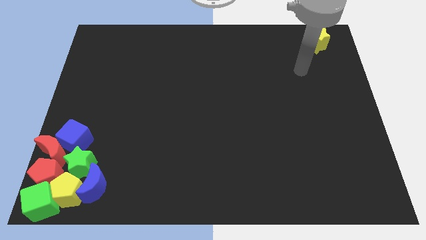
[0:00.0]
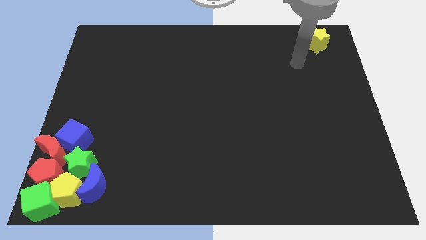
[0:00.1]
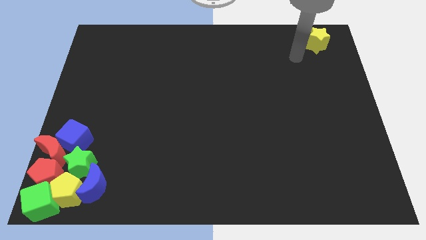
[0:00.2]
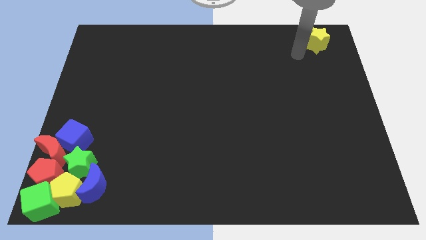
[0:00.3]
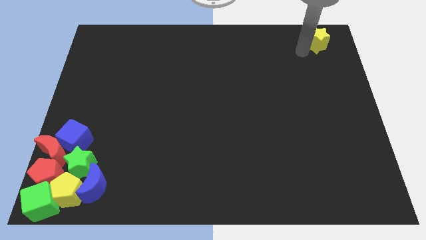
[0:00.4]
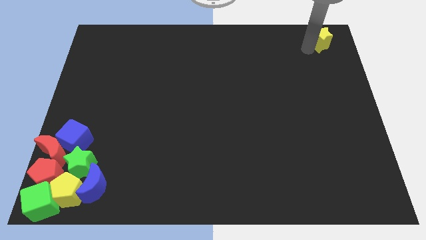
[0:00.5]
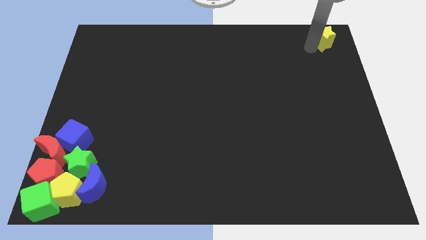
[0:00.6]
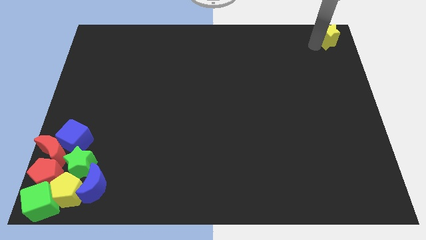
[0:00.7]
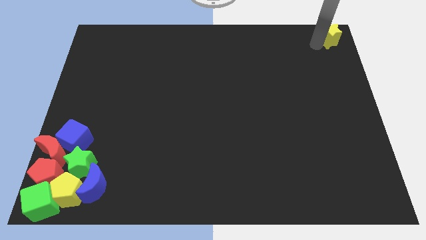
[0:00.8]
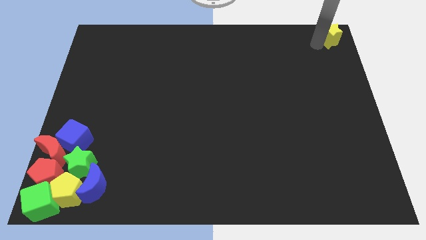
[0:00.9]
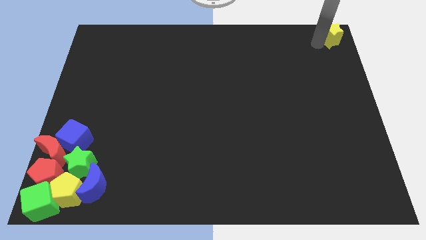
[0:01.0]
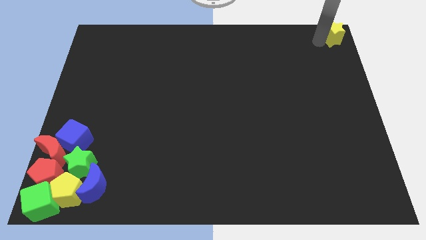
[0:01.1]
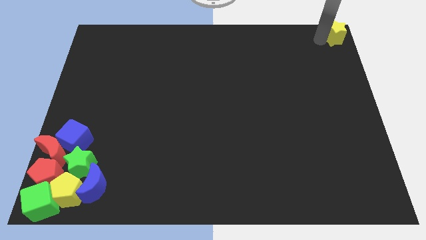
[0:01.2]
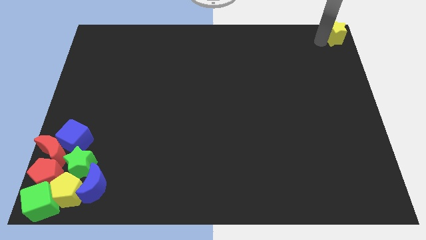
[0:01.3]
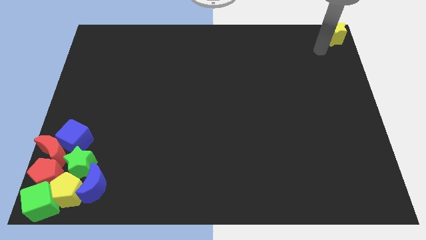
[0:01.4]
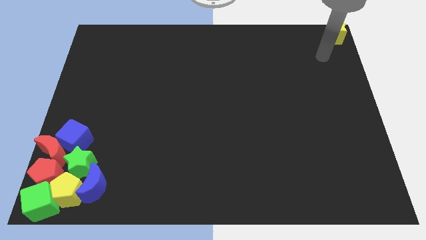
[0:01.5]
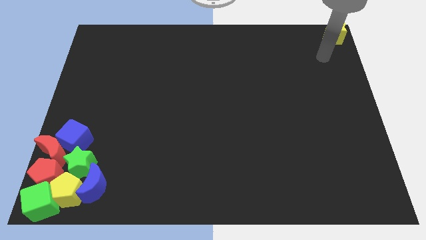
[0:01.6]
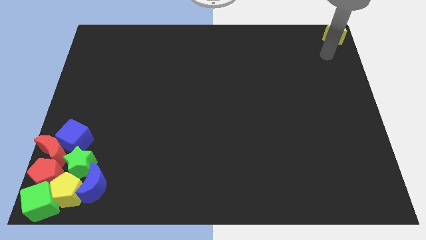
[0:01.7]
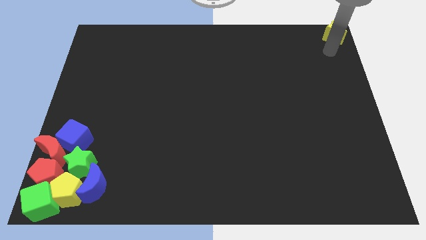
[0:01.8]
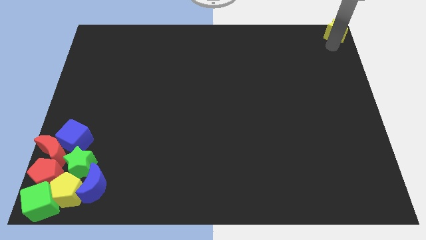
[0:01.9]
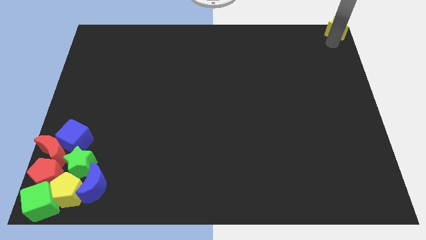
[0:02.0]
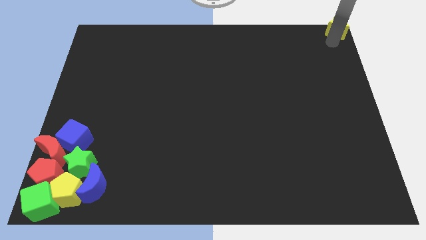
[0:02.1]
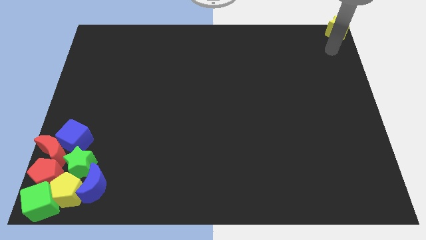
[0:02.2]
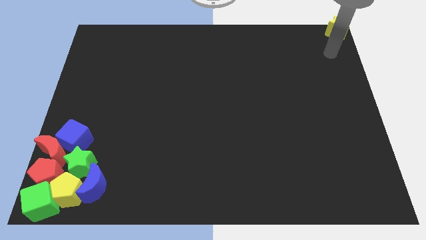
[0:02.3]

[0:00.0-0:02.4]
put the yellow star at the top right corner of the board

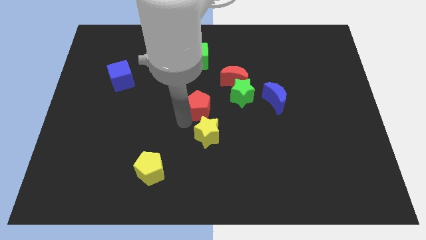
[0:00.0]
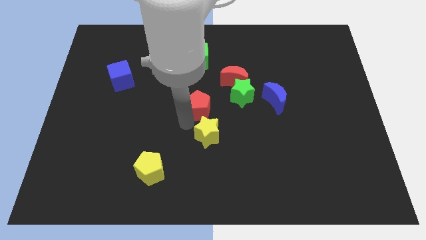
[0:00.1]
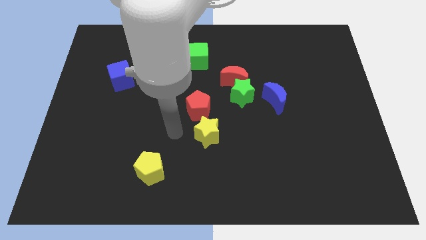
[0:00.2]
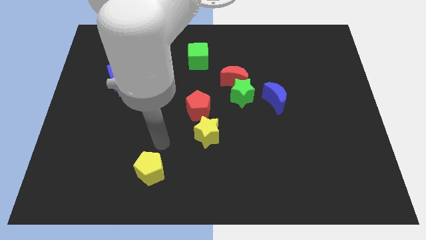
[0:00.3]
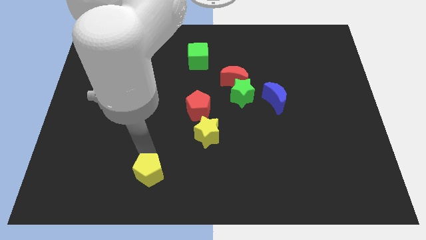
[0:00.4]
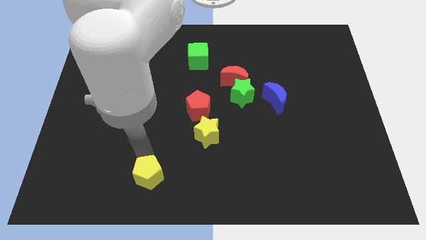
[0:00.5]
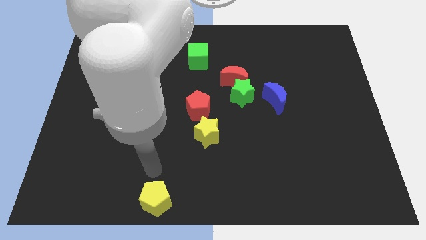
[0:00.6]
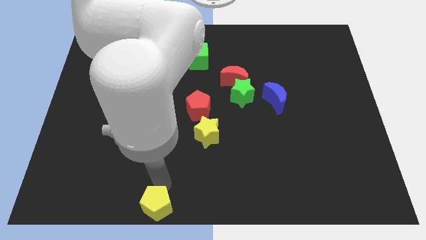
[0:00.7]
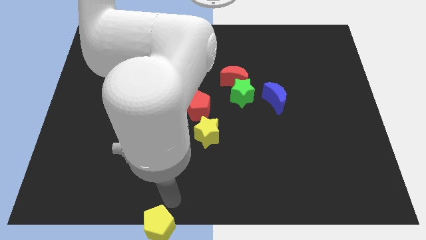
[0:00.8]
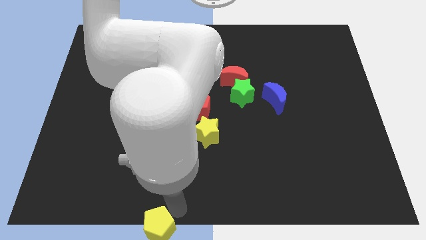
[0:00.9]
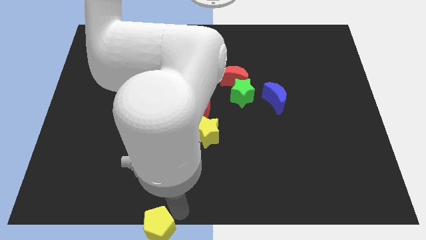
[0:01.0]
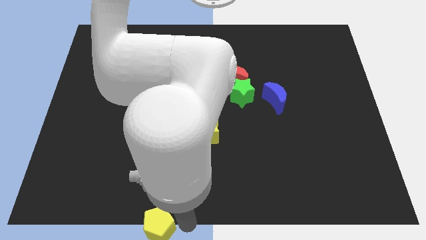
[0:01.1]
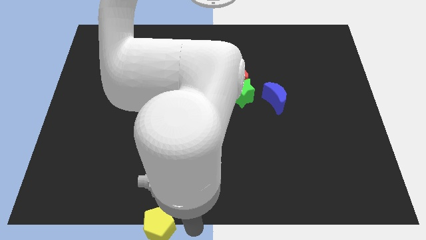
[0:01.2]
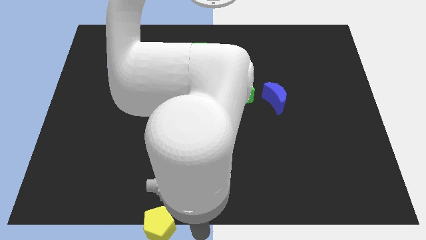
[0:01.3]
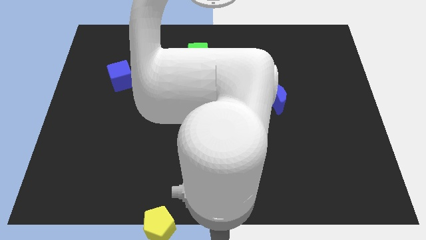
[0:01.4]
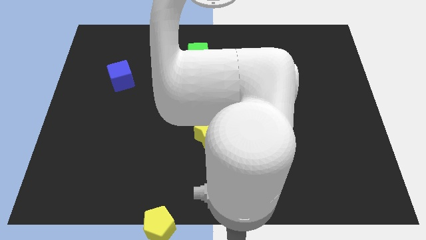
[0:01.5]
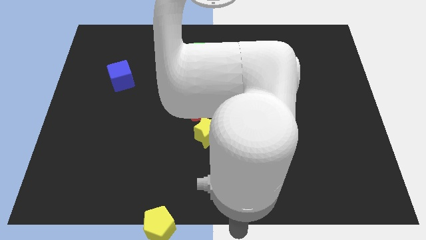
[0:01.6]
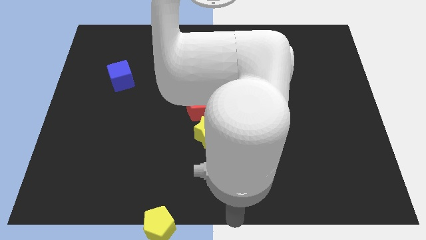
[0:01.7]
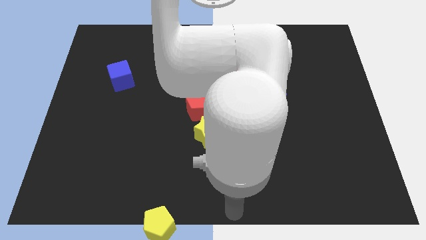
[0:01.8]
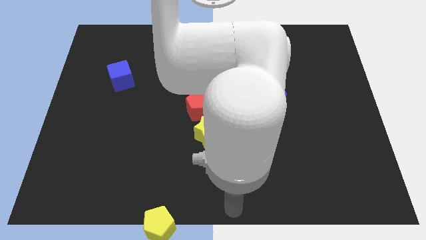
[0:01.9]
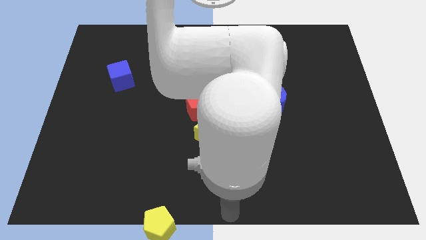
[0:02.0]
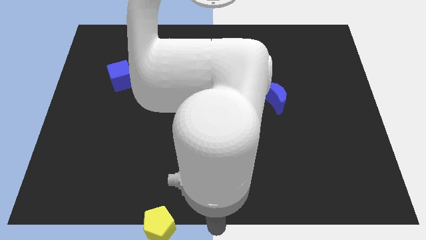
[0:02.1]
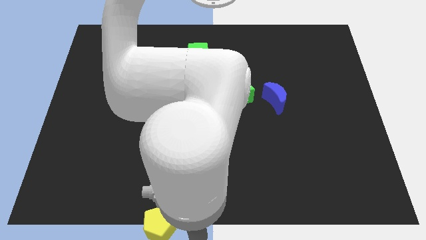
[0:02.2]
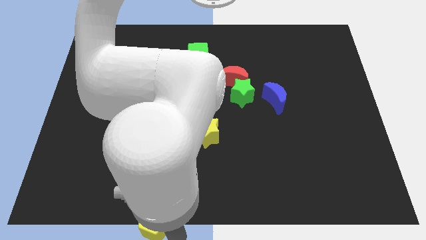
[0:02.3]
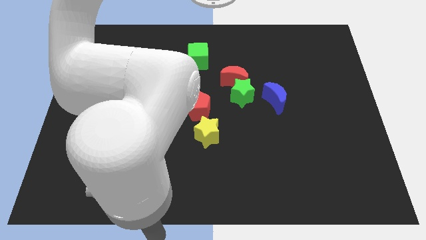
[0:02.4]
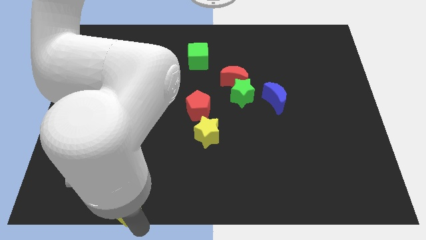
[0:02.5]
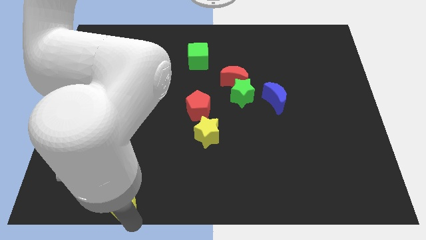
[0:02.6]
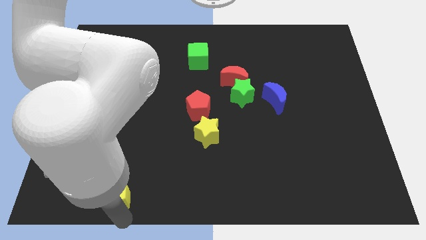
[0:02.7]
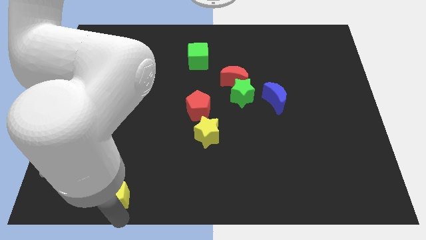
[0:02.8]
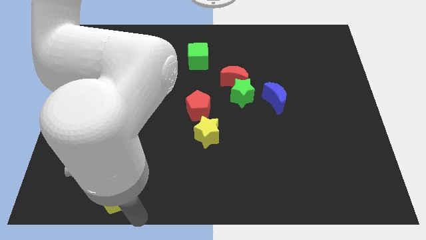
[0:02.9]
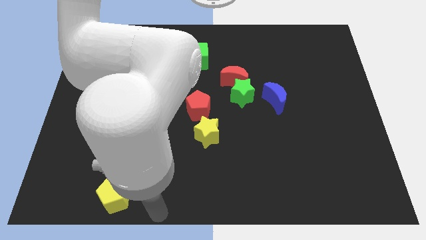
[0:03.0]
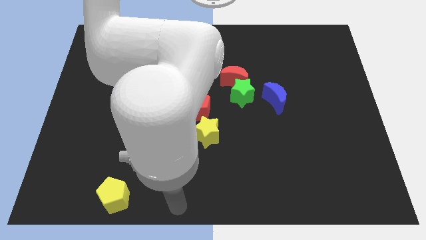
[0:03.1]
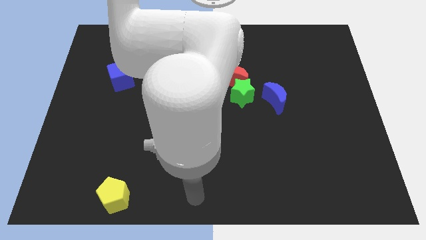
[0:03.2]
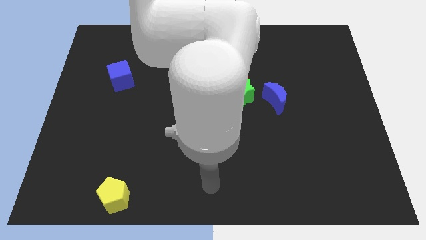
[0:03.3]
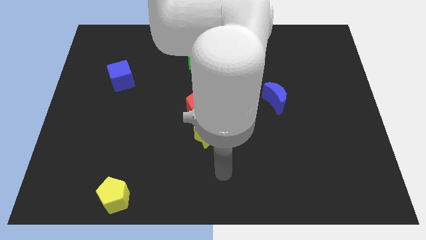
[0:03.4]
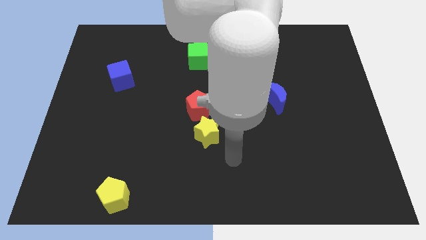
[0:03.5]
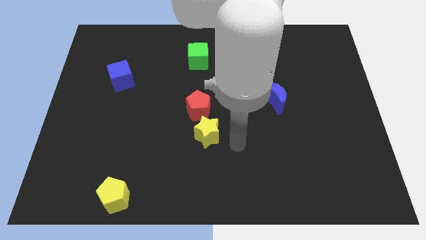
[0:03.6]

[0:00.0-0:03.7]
push yellow pentagon to the bottom left

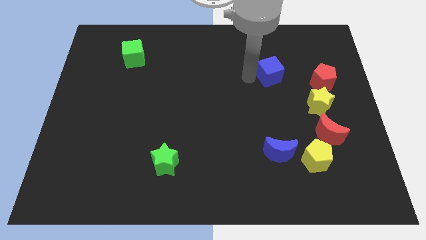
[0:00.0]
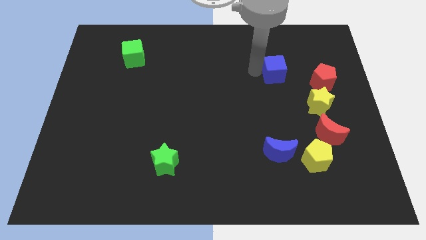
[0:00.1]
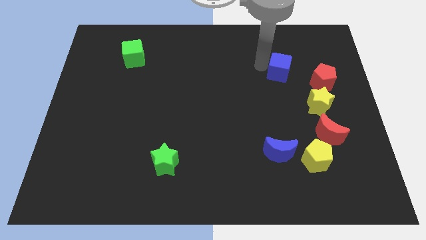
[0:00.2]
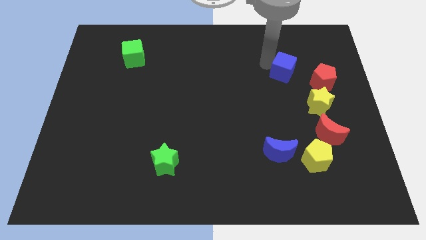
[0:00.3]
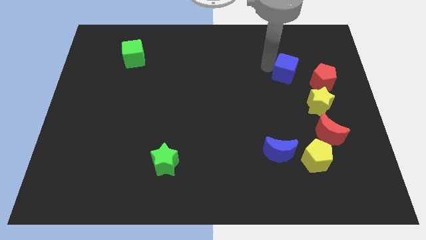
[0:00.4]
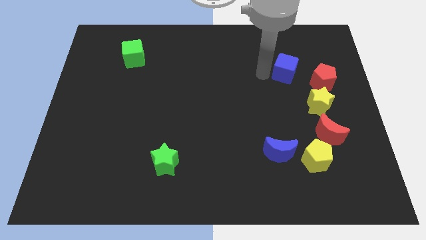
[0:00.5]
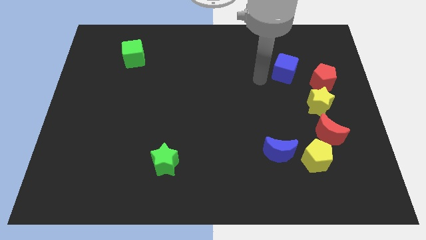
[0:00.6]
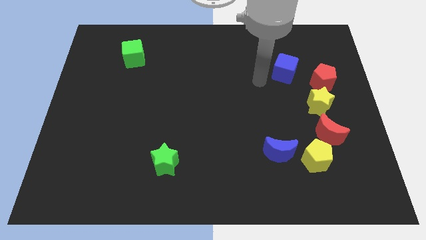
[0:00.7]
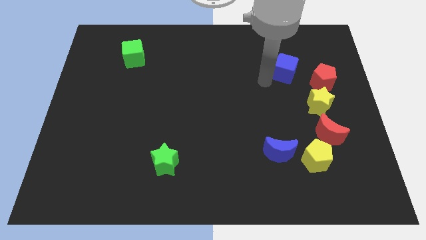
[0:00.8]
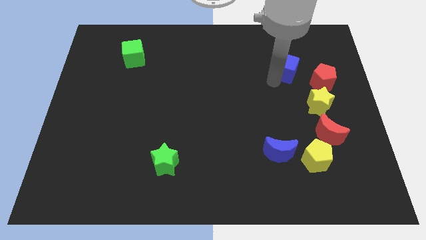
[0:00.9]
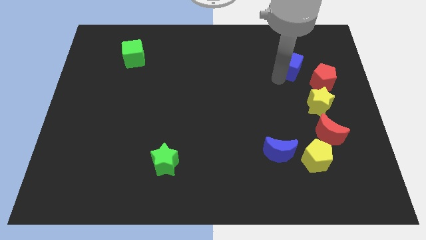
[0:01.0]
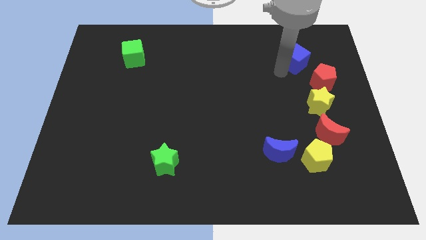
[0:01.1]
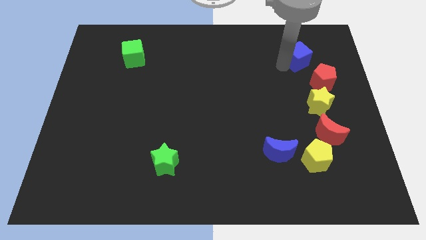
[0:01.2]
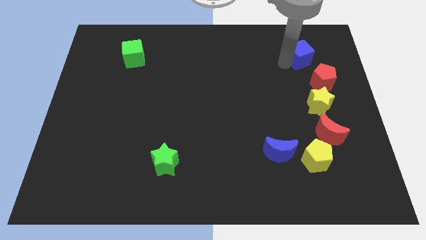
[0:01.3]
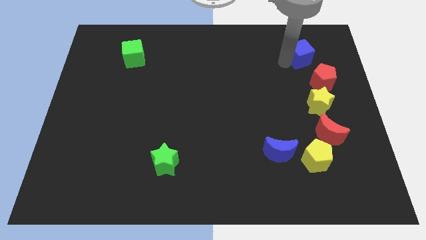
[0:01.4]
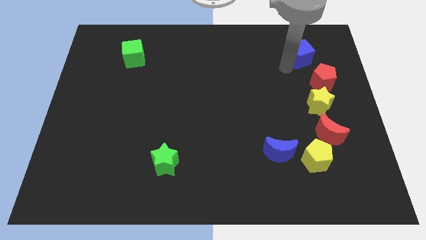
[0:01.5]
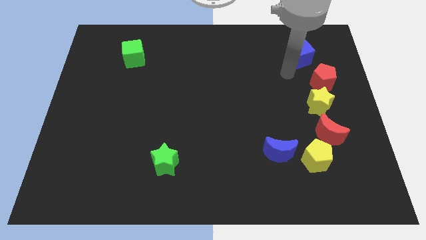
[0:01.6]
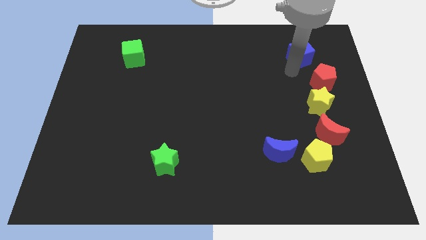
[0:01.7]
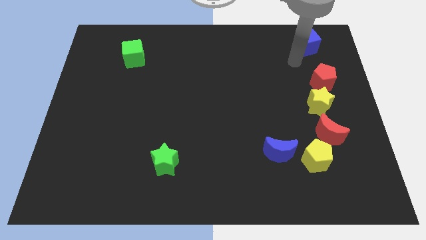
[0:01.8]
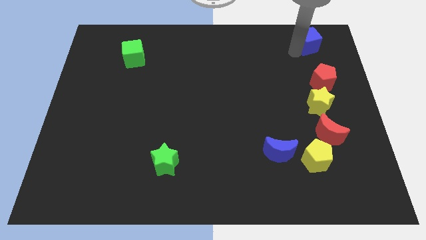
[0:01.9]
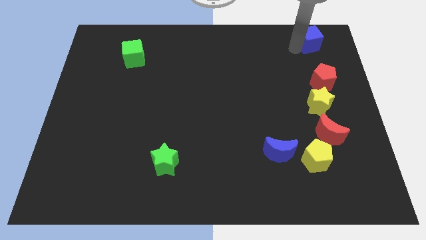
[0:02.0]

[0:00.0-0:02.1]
place the blue cube above the red pentagon

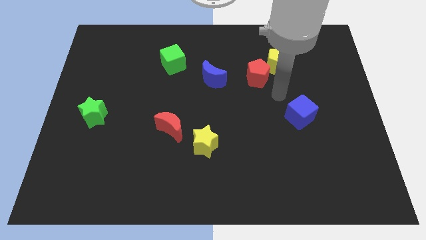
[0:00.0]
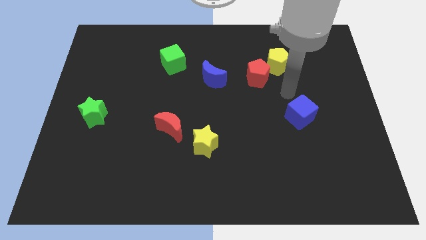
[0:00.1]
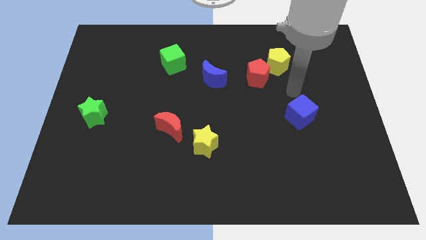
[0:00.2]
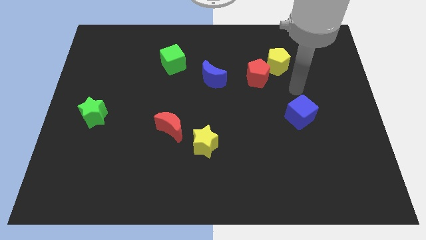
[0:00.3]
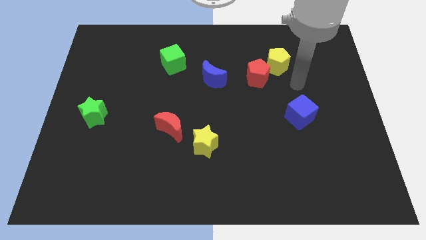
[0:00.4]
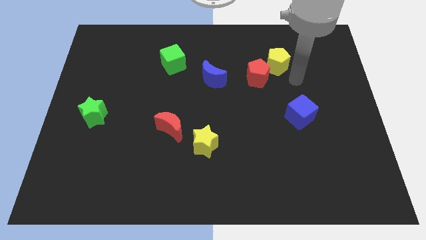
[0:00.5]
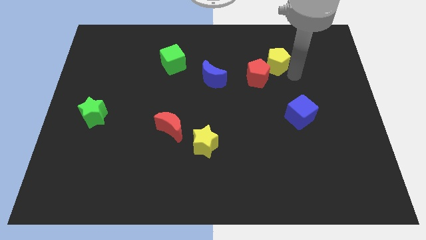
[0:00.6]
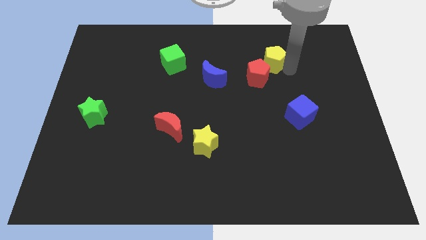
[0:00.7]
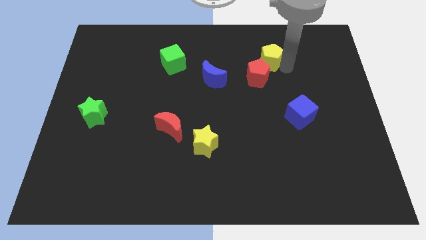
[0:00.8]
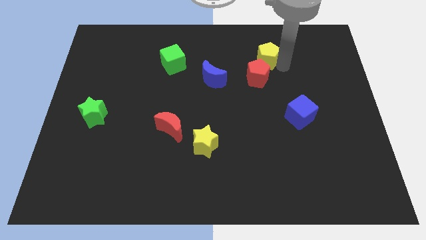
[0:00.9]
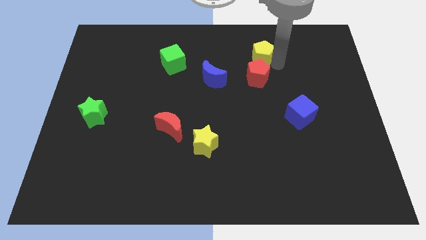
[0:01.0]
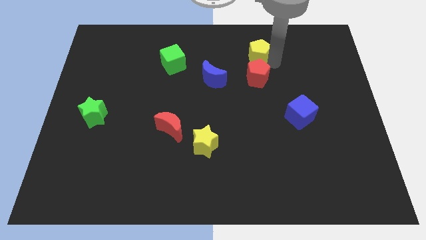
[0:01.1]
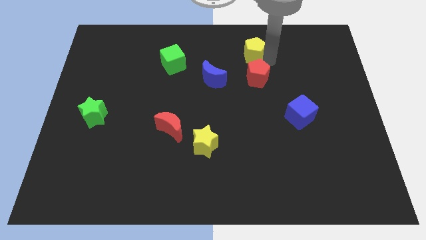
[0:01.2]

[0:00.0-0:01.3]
push the yellow pentagon top to the red pentagon
